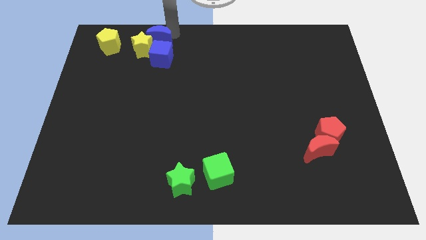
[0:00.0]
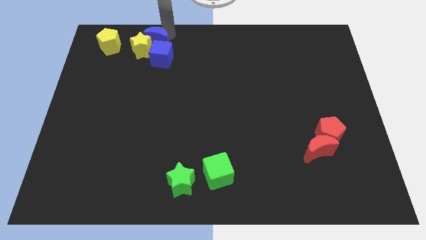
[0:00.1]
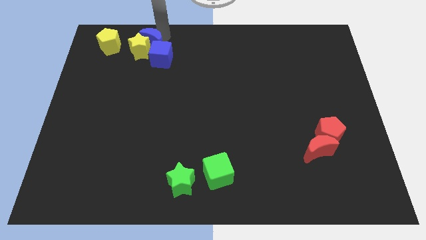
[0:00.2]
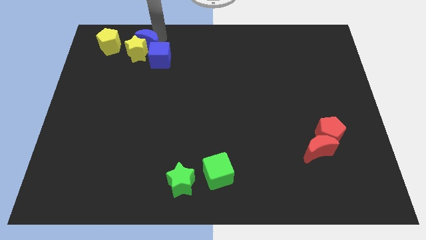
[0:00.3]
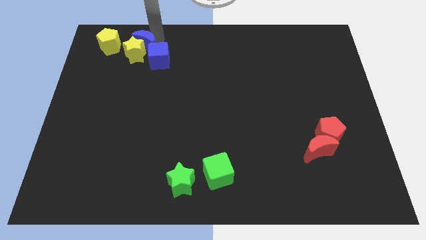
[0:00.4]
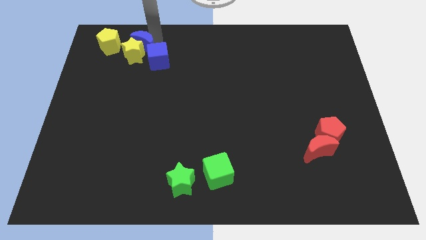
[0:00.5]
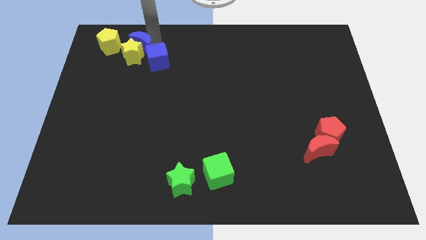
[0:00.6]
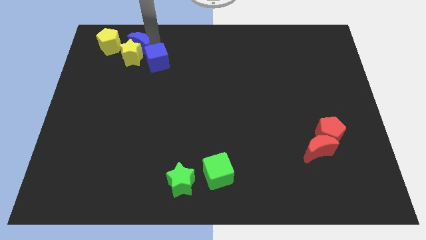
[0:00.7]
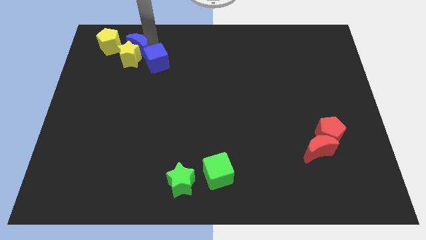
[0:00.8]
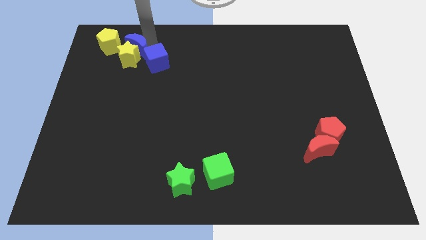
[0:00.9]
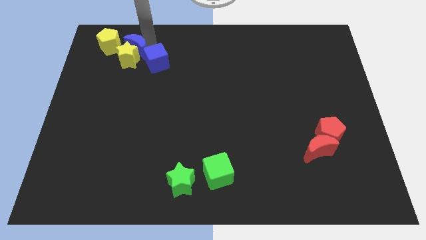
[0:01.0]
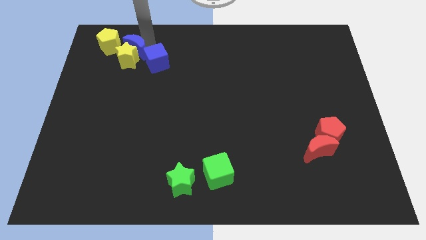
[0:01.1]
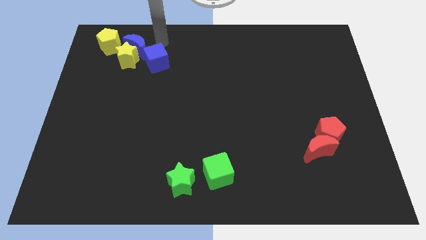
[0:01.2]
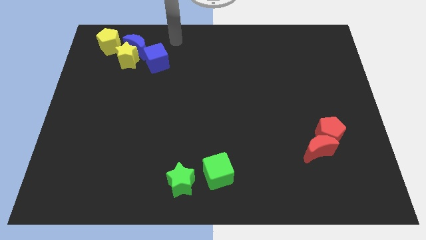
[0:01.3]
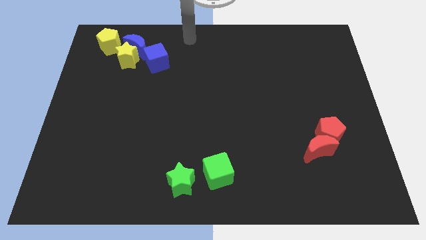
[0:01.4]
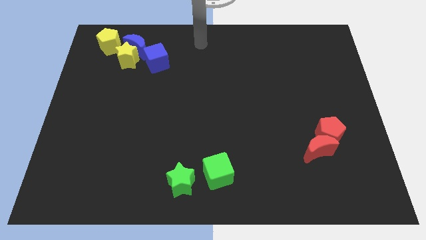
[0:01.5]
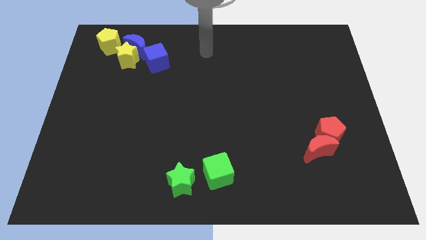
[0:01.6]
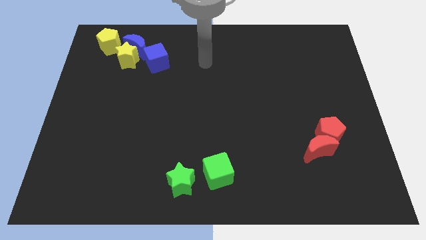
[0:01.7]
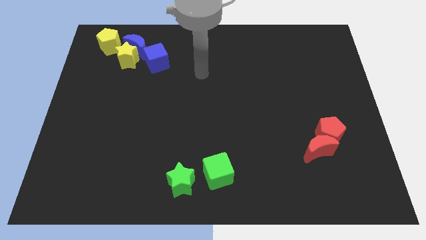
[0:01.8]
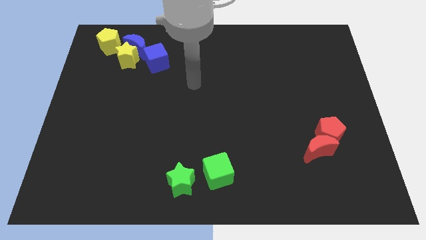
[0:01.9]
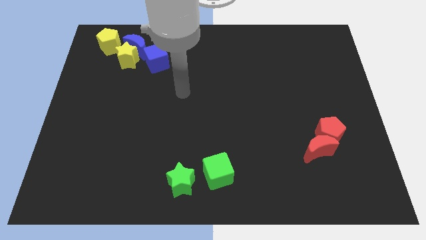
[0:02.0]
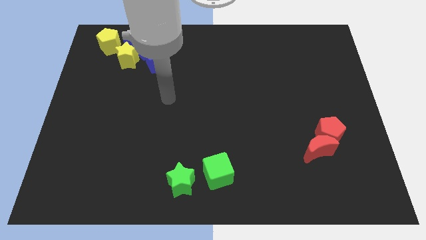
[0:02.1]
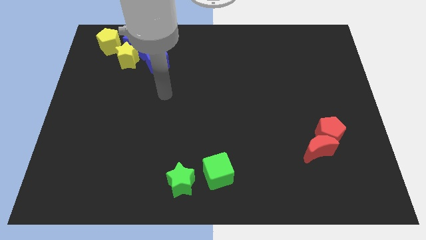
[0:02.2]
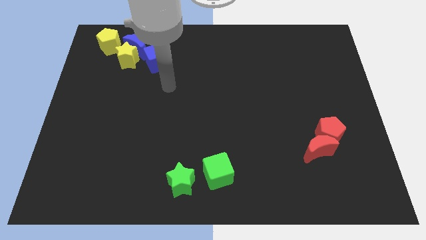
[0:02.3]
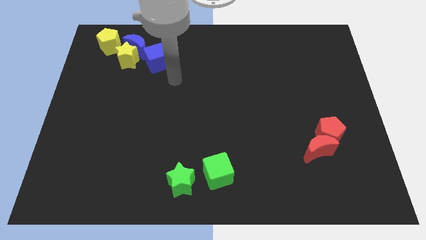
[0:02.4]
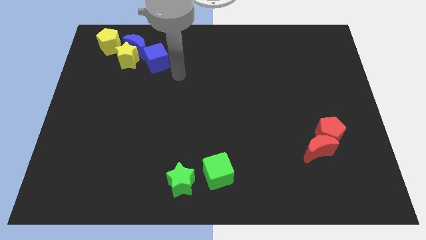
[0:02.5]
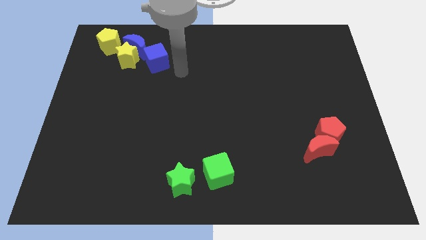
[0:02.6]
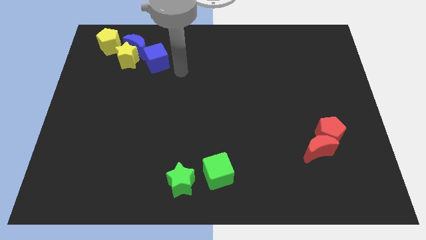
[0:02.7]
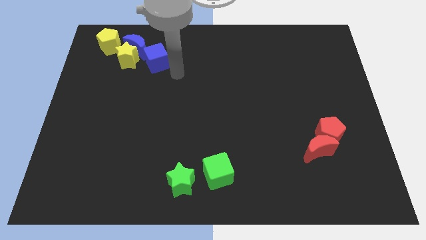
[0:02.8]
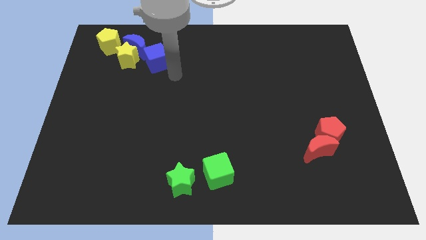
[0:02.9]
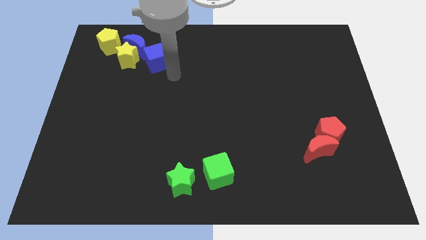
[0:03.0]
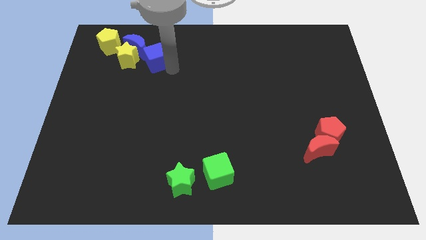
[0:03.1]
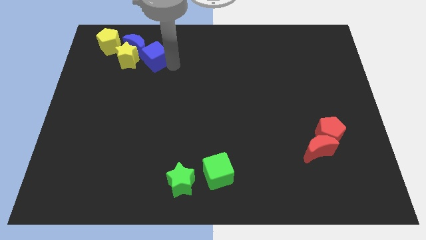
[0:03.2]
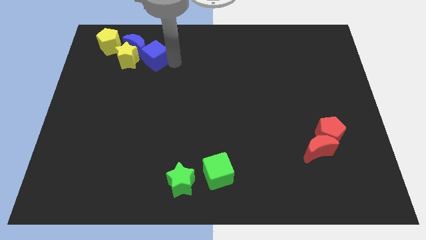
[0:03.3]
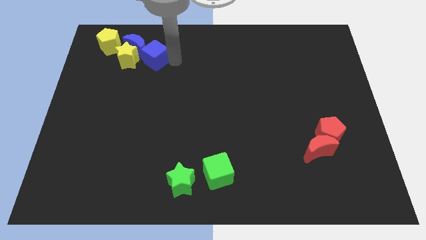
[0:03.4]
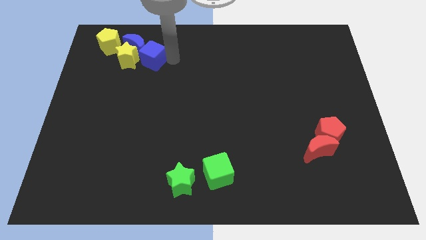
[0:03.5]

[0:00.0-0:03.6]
push blue cube and blue moon in to yellow blocks

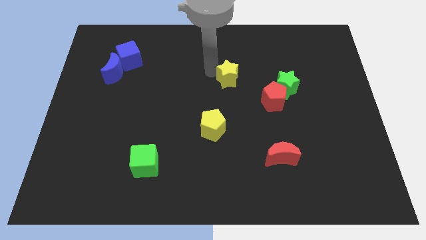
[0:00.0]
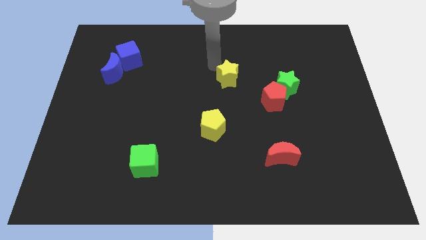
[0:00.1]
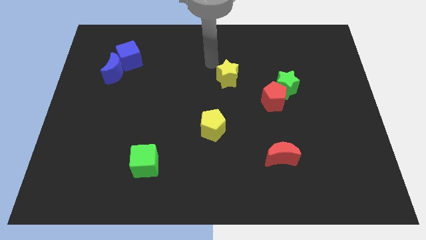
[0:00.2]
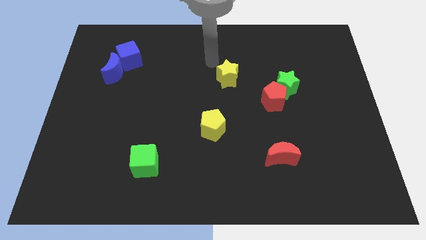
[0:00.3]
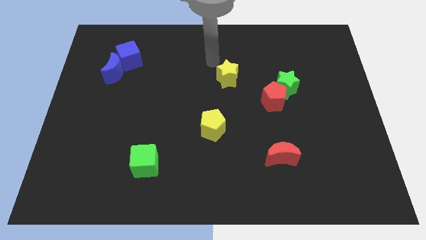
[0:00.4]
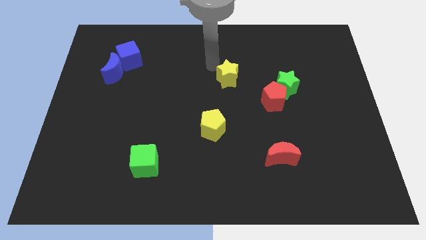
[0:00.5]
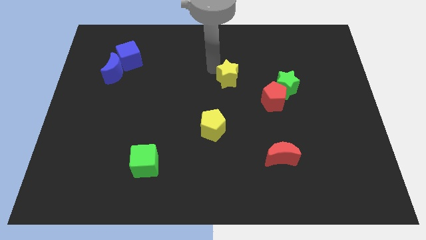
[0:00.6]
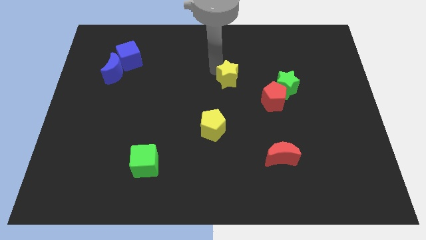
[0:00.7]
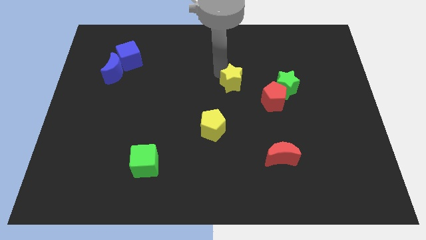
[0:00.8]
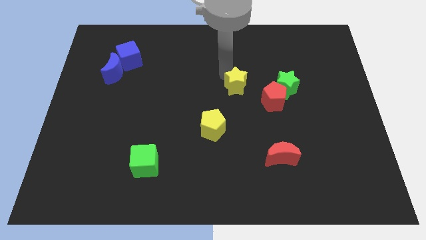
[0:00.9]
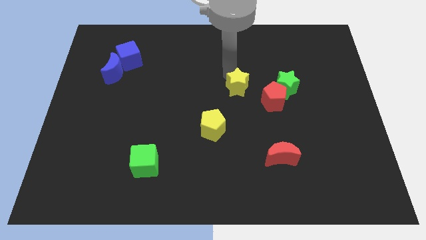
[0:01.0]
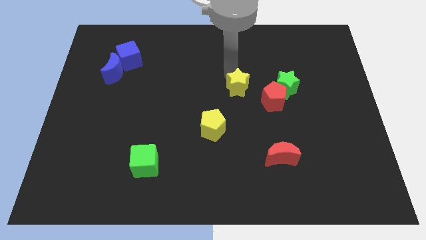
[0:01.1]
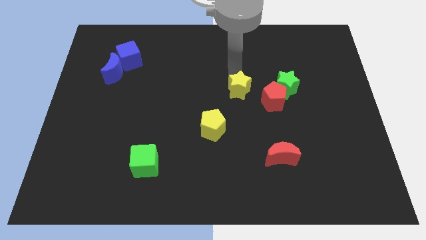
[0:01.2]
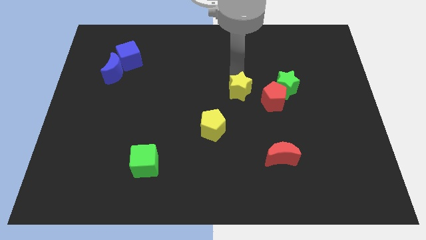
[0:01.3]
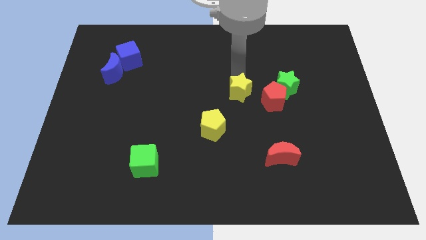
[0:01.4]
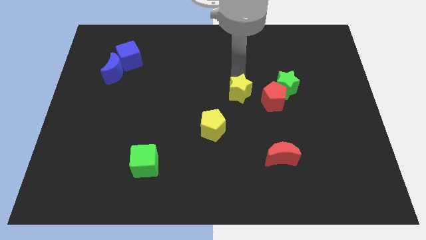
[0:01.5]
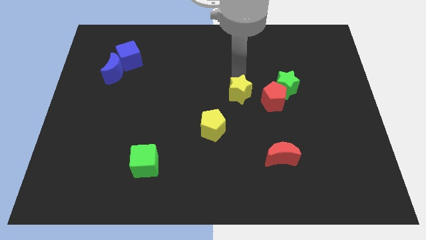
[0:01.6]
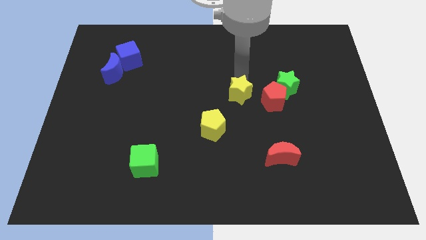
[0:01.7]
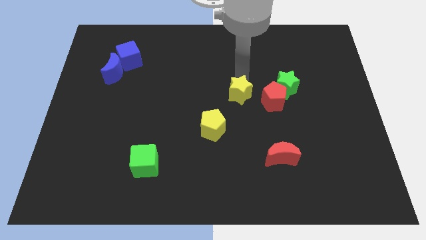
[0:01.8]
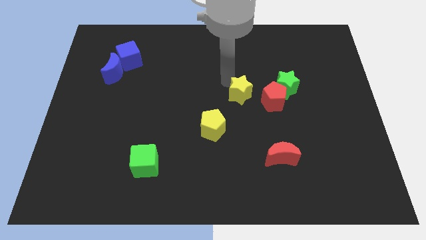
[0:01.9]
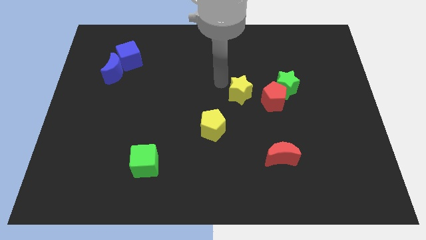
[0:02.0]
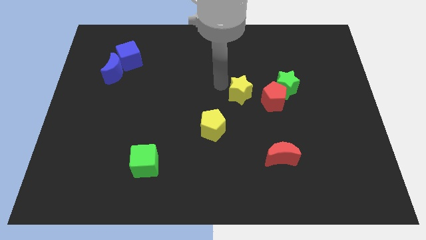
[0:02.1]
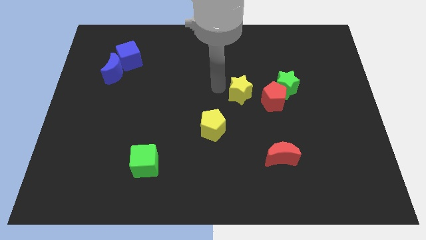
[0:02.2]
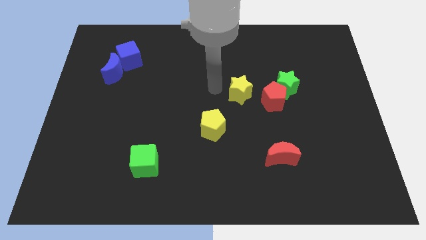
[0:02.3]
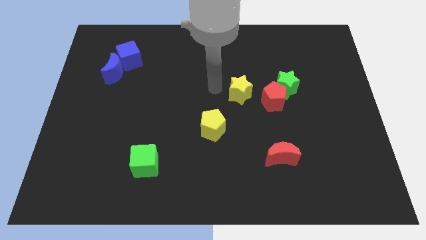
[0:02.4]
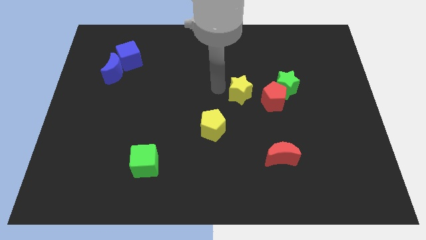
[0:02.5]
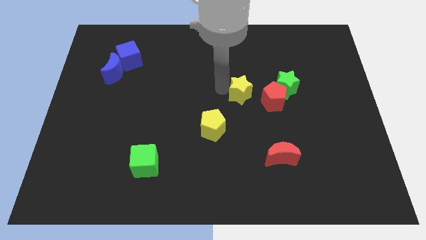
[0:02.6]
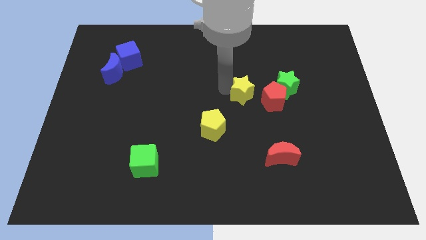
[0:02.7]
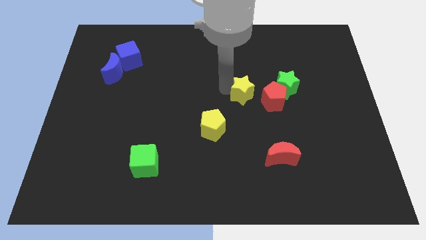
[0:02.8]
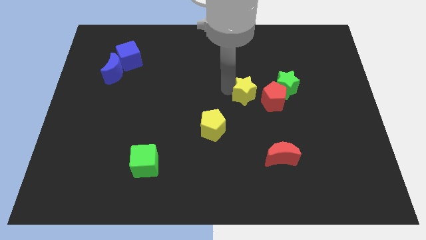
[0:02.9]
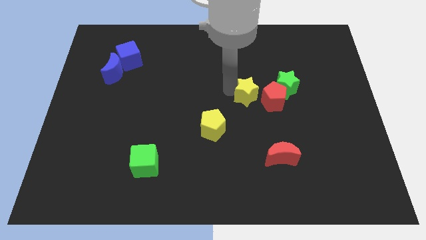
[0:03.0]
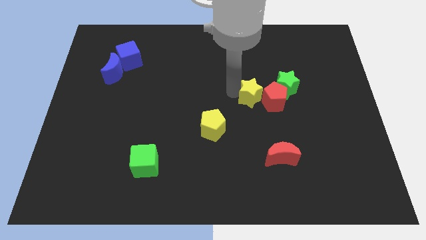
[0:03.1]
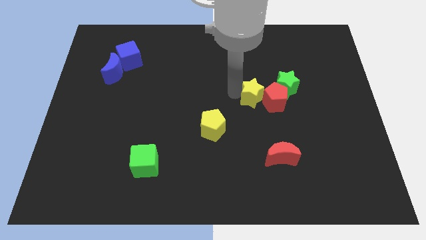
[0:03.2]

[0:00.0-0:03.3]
move yellow star into the red pentagon

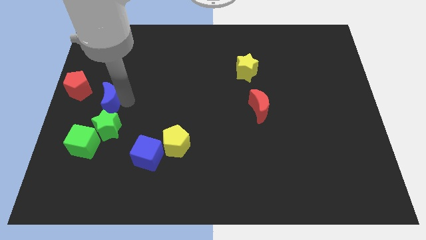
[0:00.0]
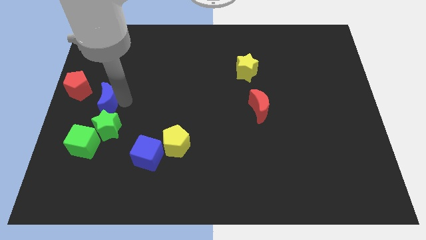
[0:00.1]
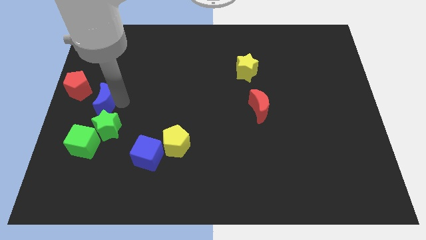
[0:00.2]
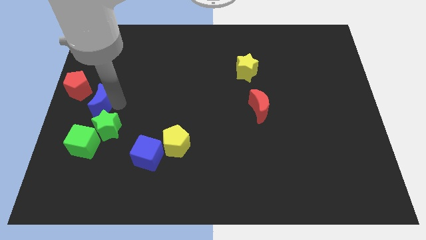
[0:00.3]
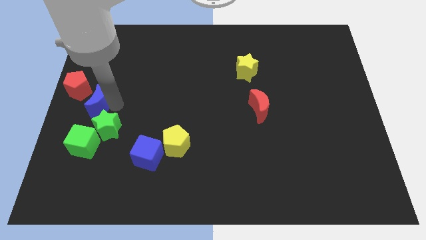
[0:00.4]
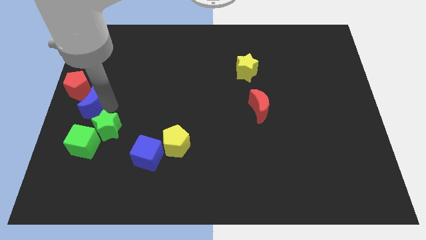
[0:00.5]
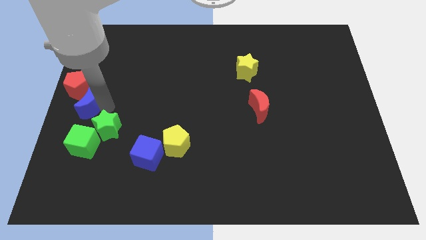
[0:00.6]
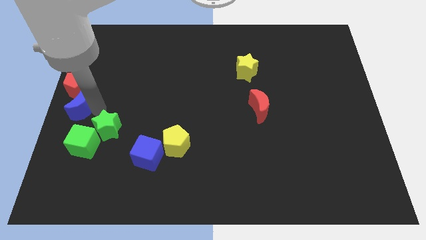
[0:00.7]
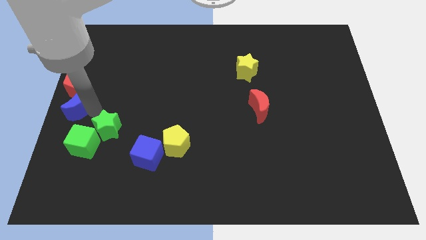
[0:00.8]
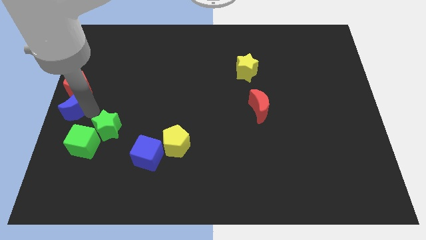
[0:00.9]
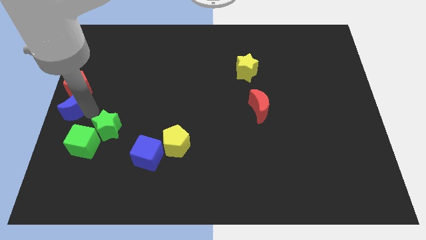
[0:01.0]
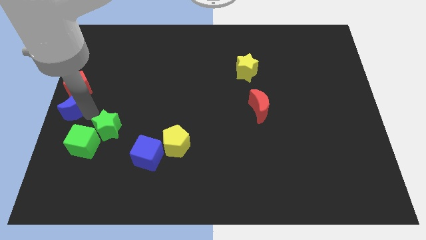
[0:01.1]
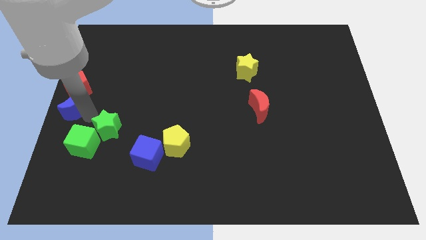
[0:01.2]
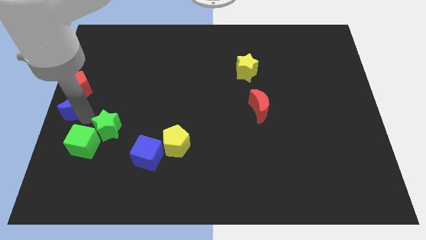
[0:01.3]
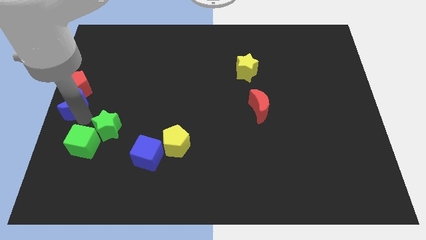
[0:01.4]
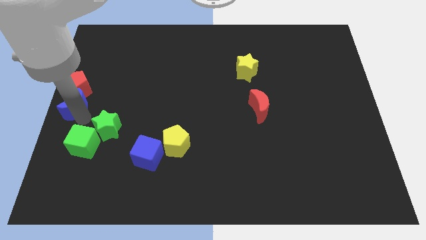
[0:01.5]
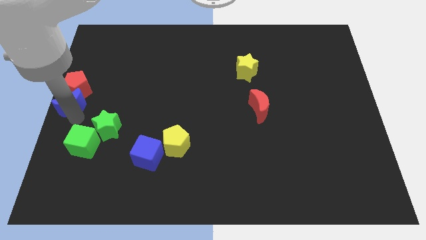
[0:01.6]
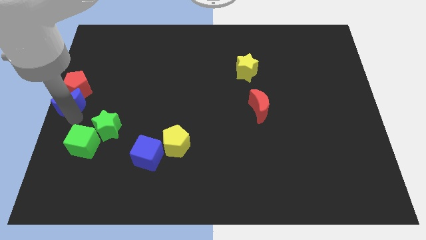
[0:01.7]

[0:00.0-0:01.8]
push the blue crescent to the bottom of the red pentagon

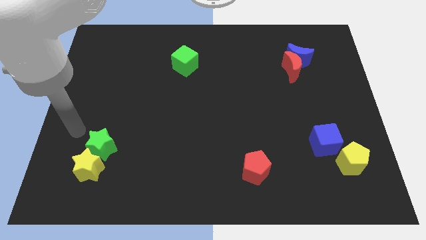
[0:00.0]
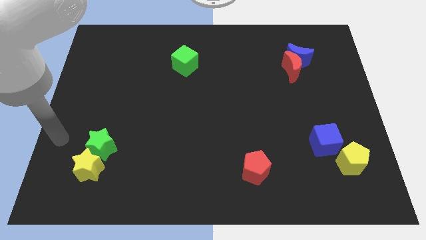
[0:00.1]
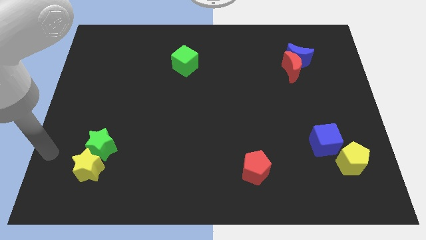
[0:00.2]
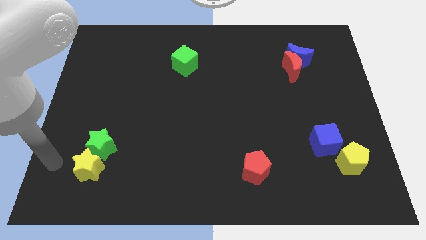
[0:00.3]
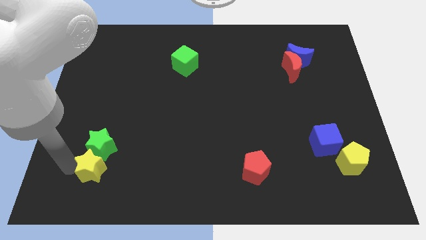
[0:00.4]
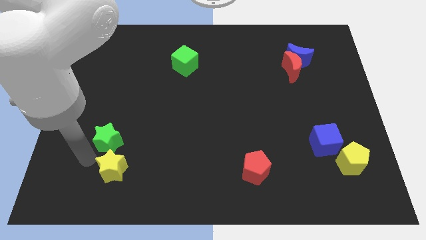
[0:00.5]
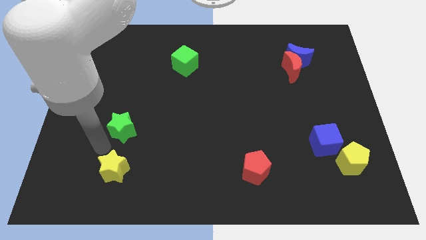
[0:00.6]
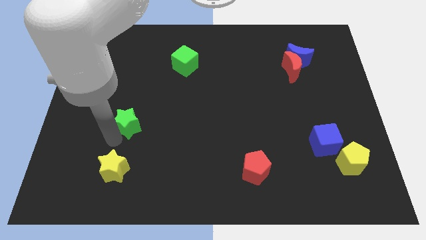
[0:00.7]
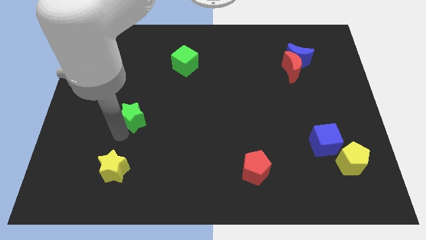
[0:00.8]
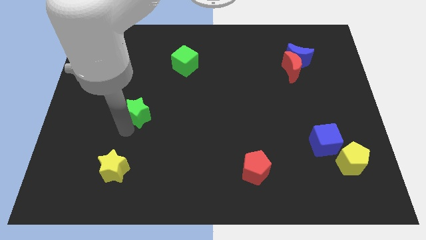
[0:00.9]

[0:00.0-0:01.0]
seperate yellow star and green star
